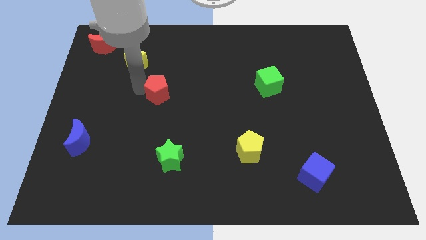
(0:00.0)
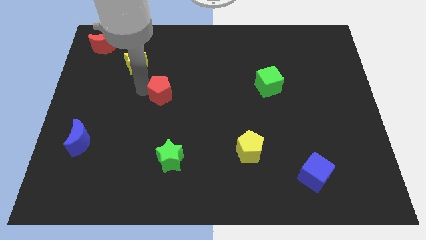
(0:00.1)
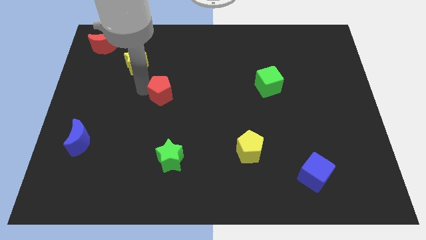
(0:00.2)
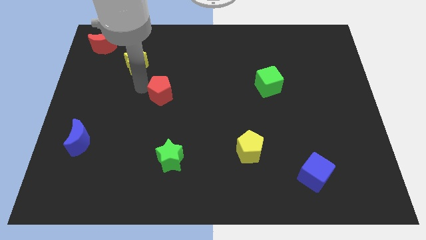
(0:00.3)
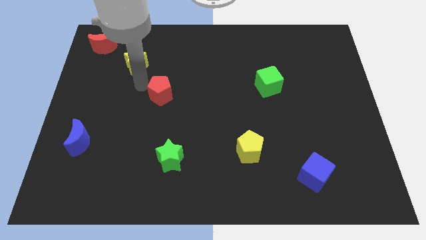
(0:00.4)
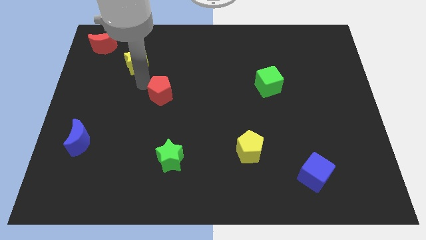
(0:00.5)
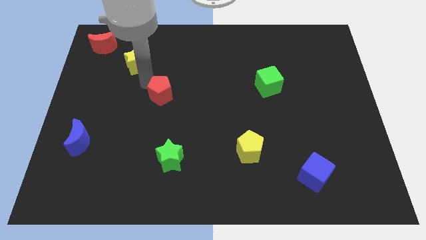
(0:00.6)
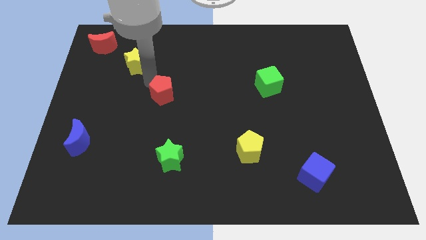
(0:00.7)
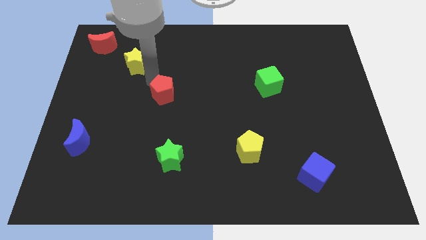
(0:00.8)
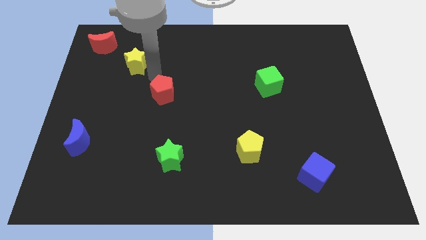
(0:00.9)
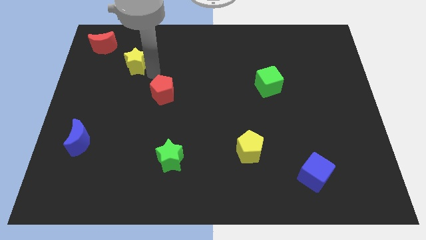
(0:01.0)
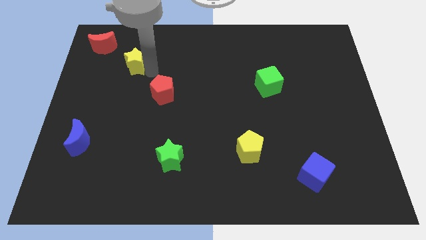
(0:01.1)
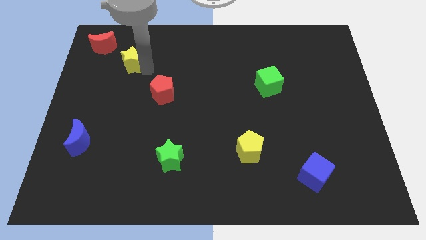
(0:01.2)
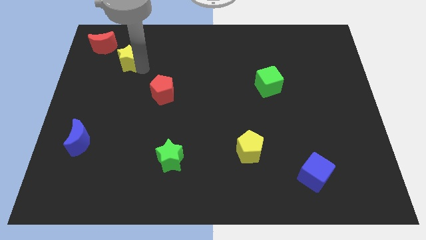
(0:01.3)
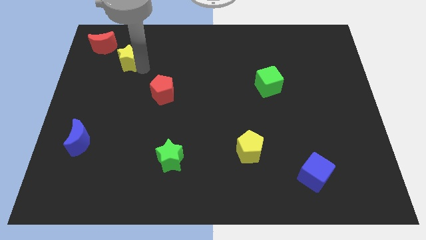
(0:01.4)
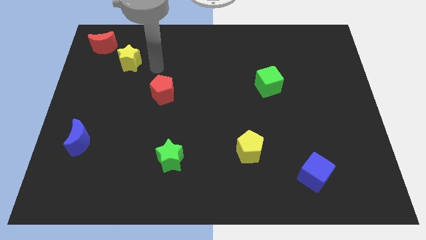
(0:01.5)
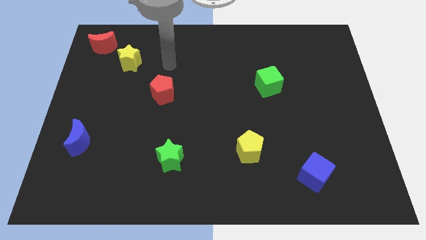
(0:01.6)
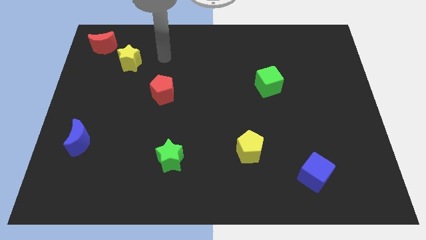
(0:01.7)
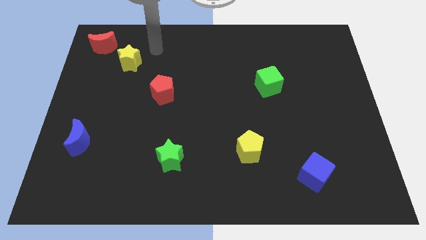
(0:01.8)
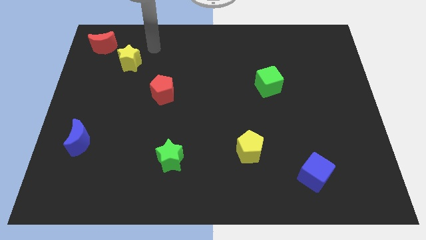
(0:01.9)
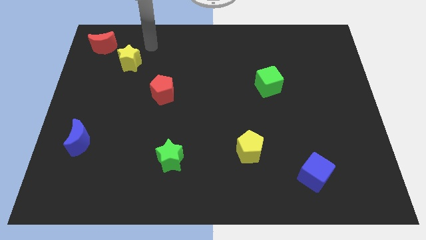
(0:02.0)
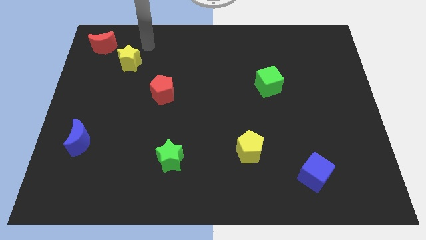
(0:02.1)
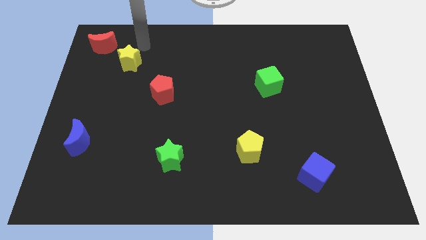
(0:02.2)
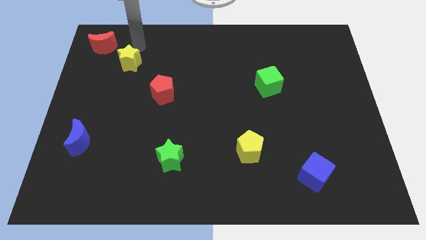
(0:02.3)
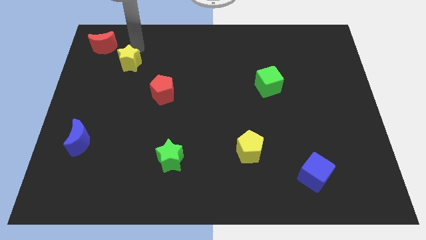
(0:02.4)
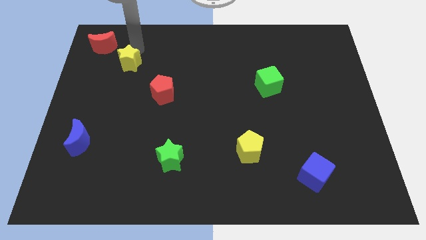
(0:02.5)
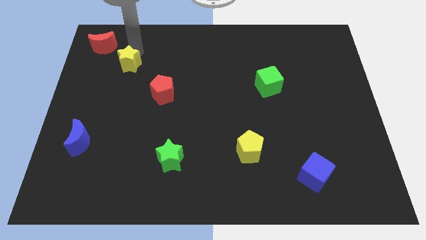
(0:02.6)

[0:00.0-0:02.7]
move yellow star towards red crescent

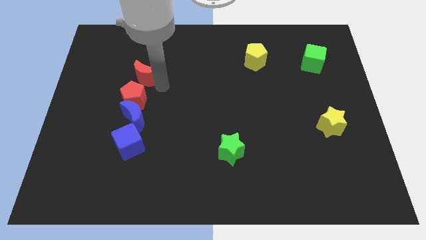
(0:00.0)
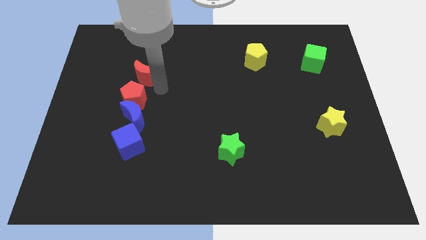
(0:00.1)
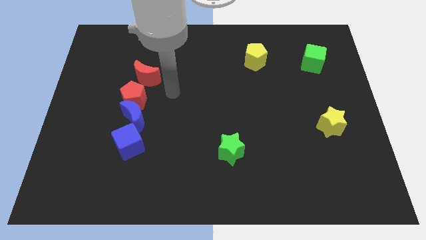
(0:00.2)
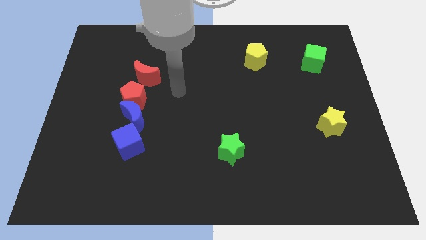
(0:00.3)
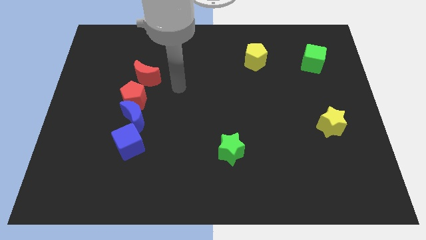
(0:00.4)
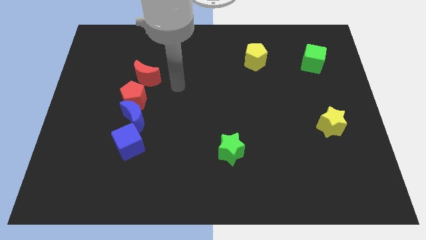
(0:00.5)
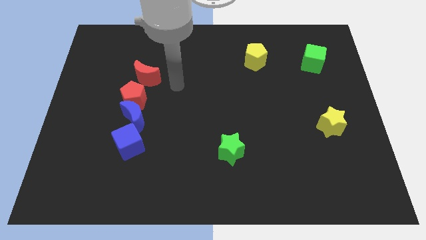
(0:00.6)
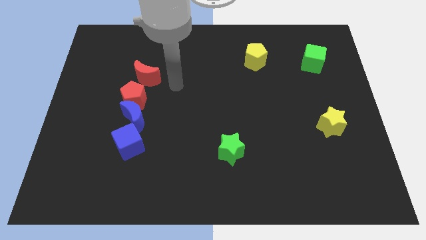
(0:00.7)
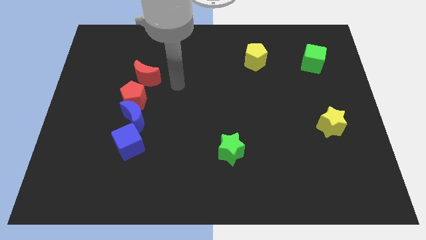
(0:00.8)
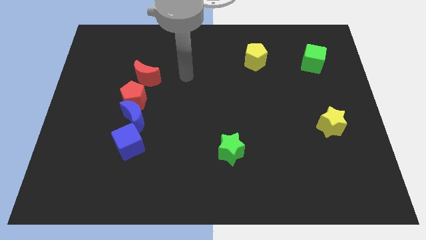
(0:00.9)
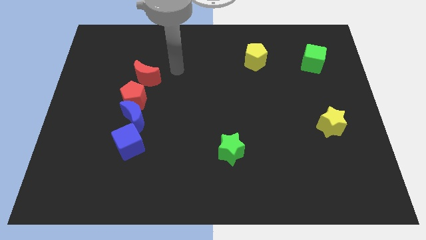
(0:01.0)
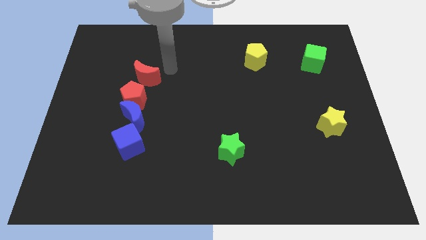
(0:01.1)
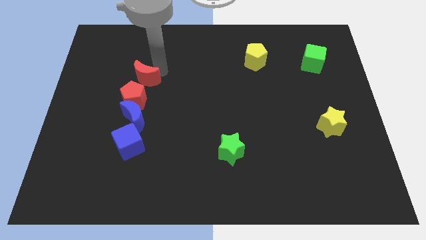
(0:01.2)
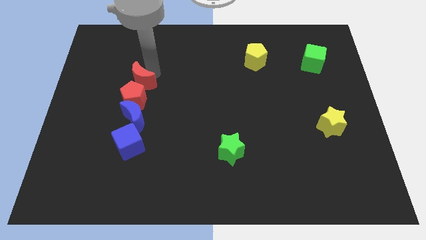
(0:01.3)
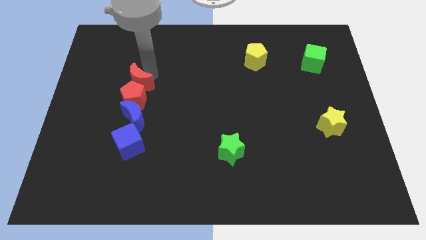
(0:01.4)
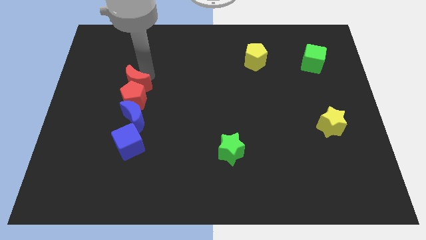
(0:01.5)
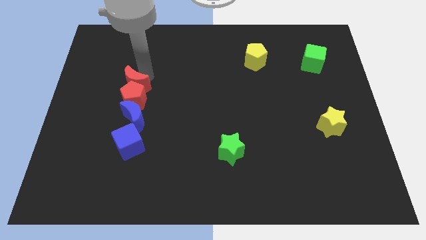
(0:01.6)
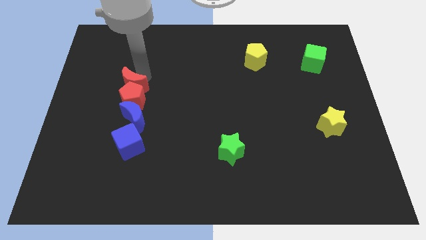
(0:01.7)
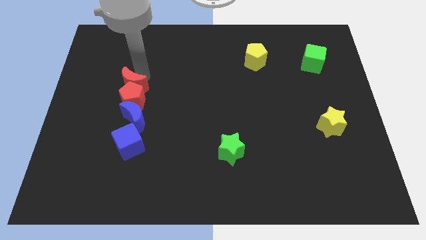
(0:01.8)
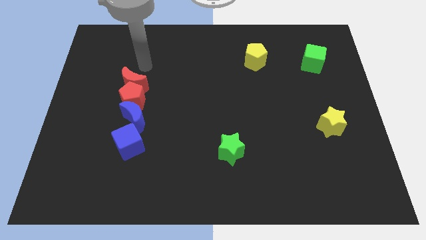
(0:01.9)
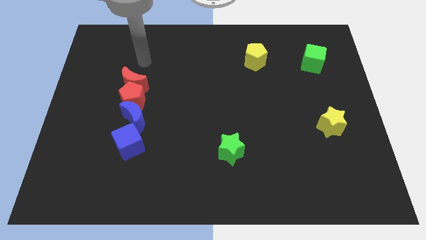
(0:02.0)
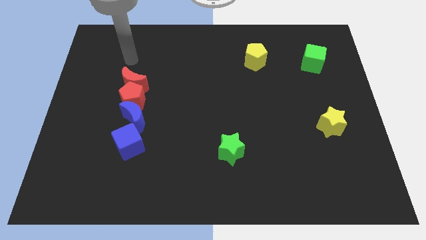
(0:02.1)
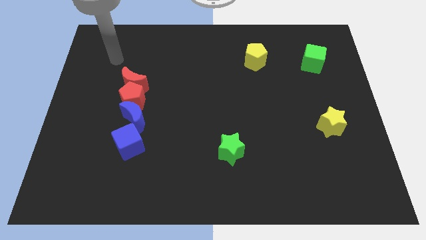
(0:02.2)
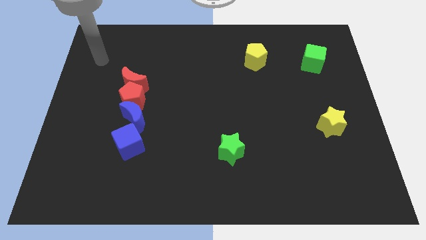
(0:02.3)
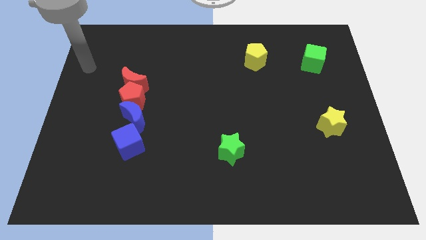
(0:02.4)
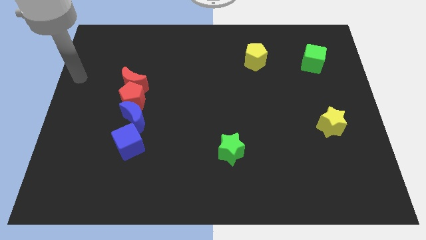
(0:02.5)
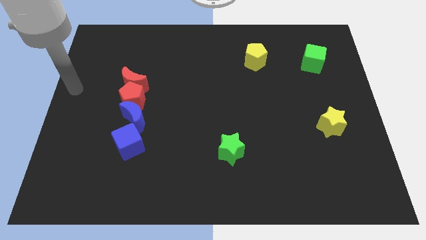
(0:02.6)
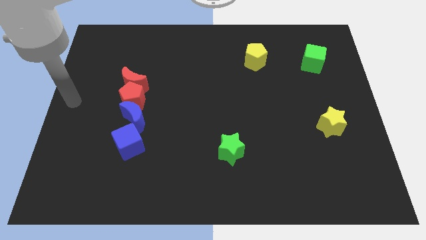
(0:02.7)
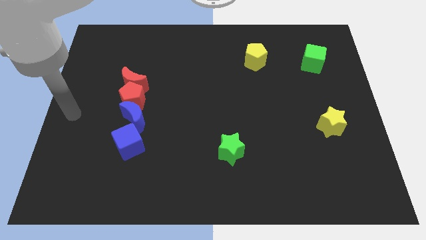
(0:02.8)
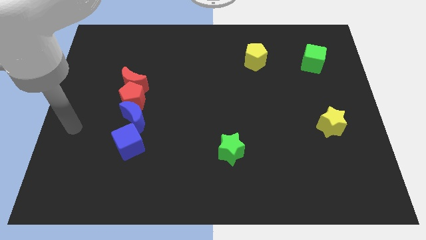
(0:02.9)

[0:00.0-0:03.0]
push the red moon with the red pentagon

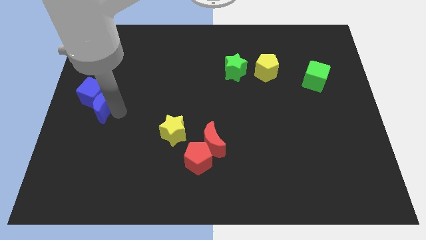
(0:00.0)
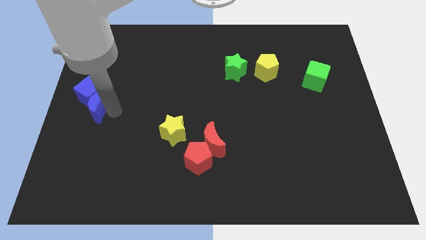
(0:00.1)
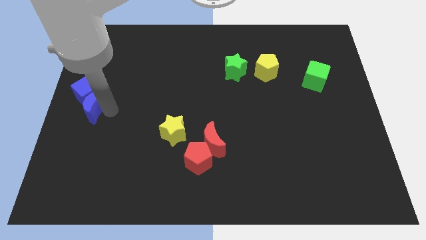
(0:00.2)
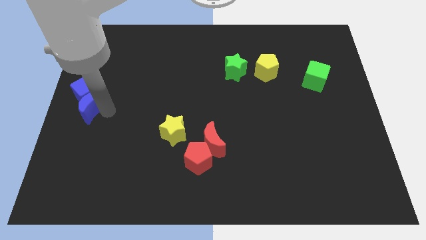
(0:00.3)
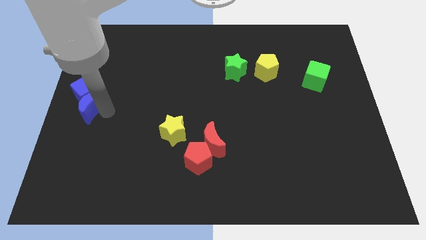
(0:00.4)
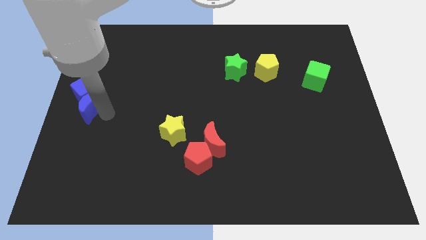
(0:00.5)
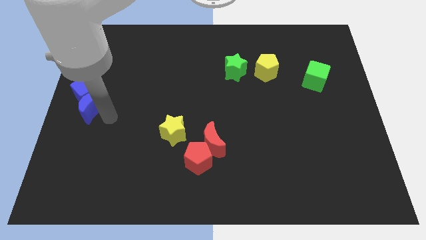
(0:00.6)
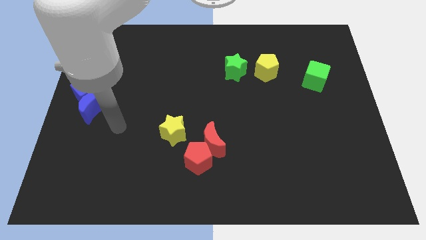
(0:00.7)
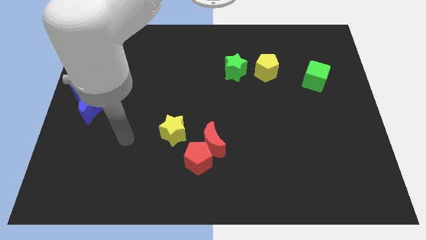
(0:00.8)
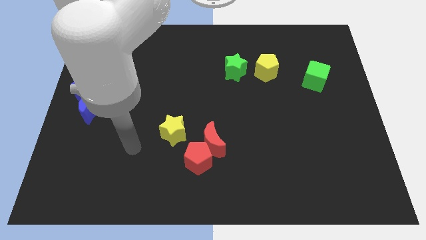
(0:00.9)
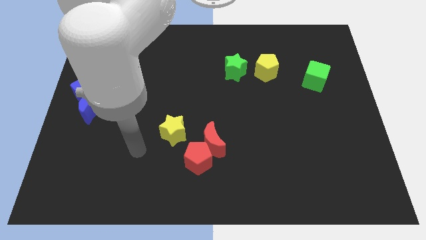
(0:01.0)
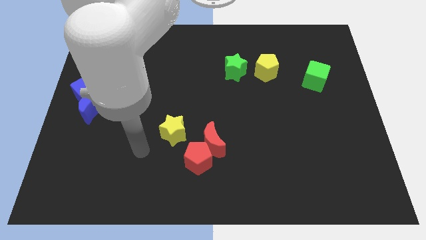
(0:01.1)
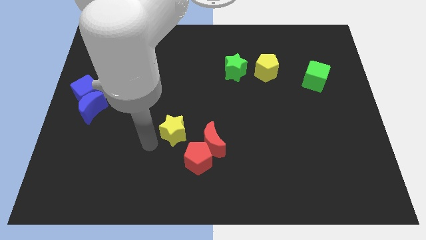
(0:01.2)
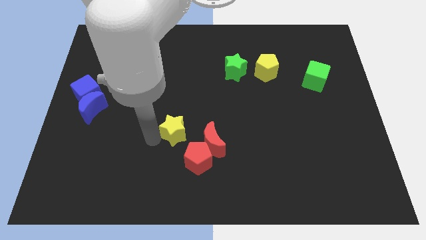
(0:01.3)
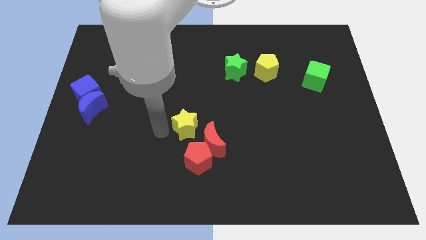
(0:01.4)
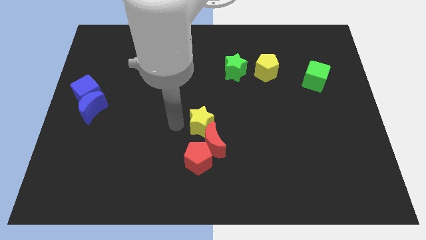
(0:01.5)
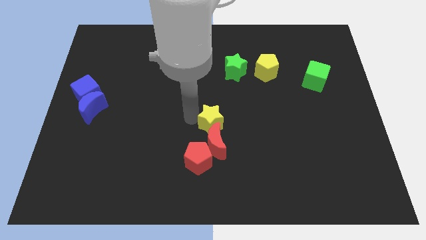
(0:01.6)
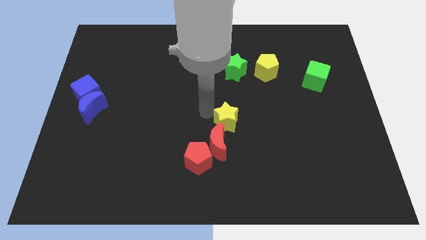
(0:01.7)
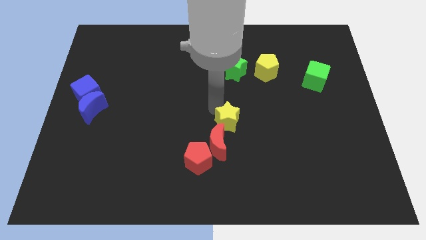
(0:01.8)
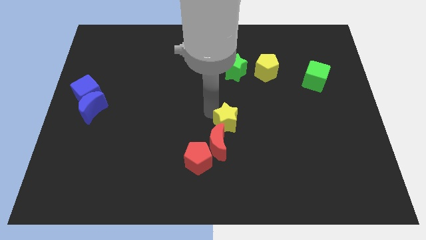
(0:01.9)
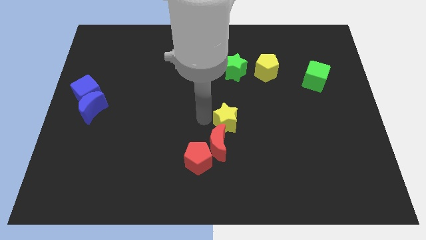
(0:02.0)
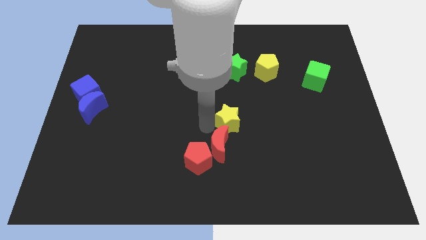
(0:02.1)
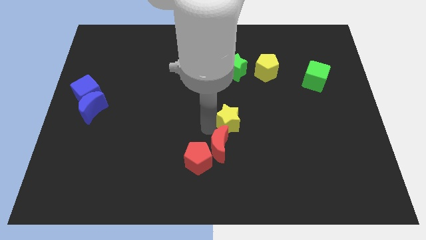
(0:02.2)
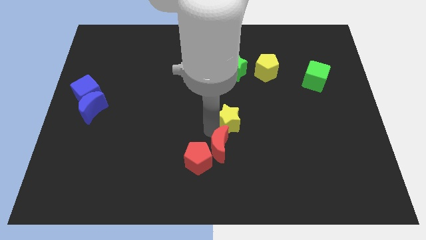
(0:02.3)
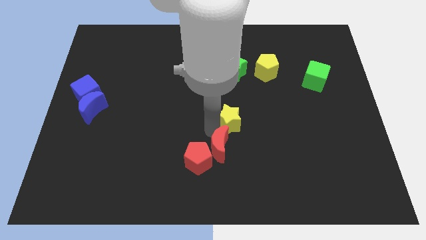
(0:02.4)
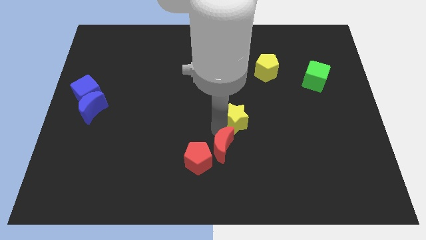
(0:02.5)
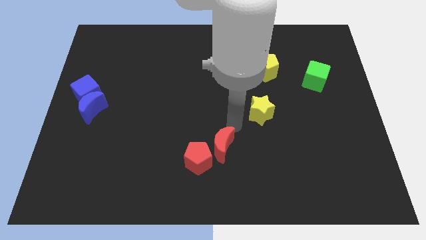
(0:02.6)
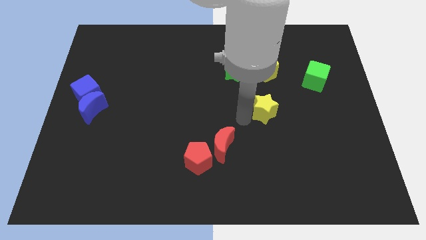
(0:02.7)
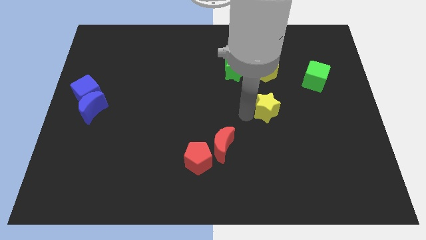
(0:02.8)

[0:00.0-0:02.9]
move the yellow star diagonally to red crescent

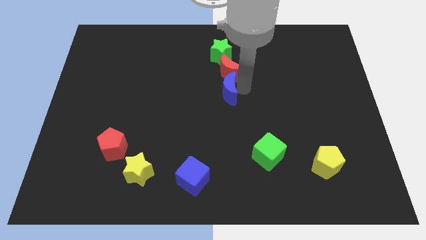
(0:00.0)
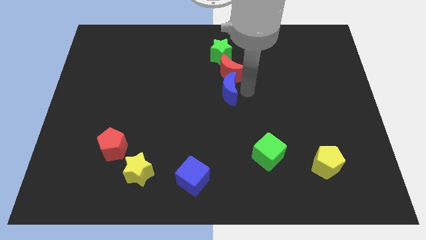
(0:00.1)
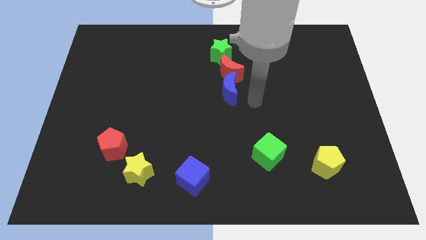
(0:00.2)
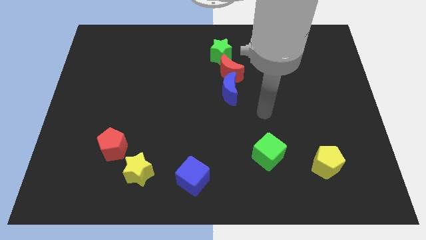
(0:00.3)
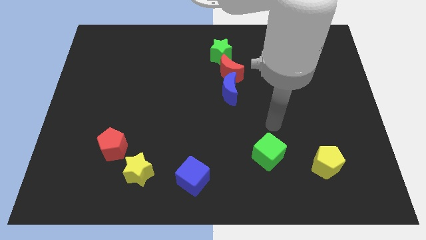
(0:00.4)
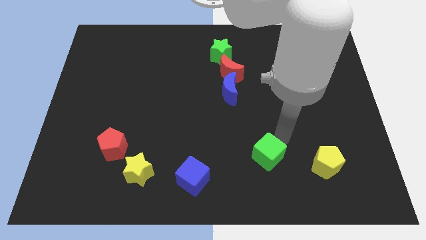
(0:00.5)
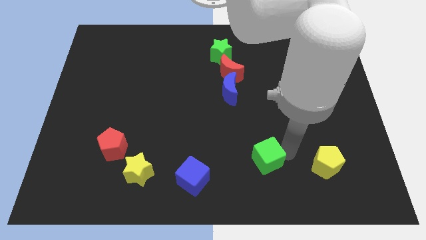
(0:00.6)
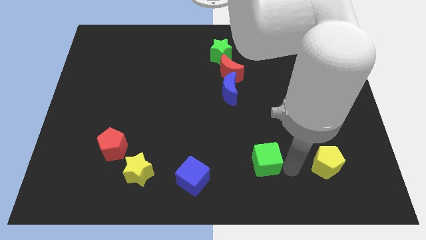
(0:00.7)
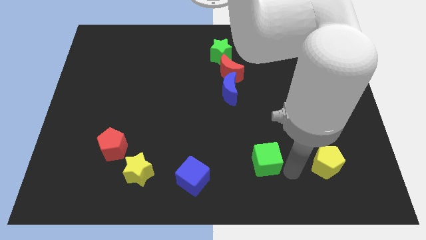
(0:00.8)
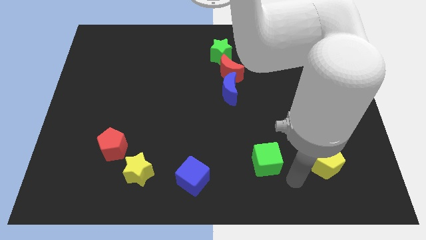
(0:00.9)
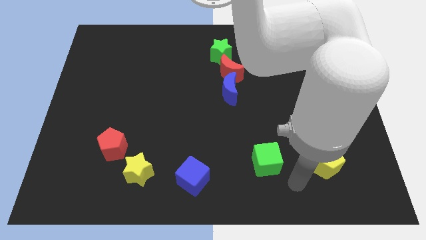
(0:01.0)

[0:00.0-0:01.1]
move your arm away from blue moon
